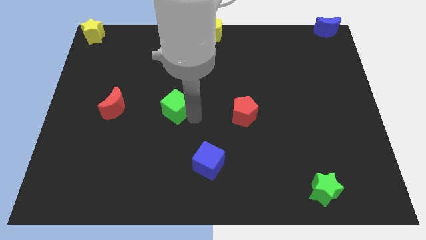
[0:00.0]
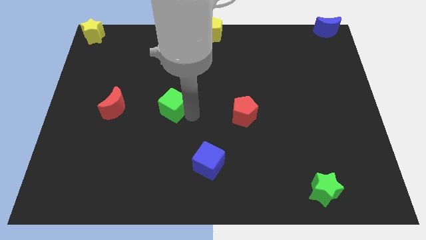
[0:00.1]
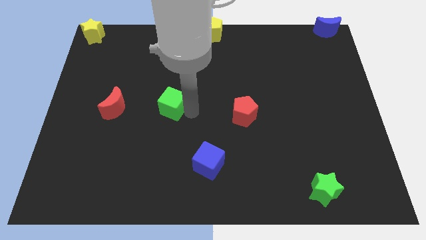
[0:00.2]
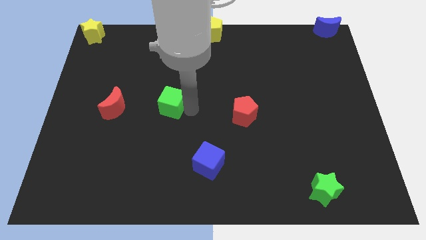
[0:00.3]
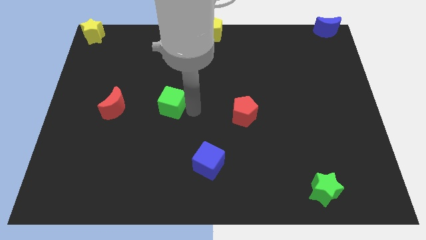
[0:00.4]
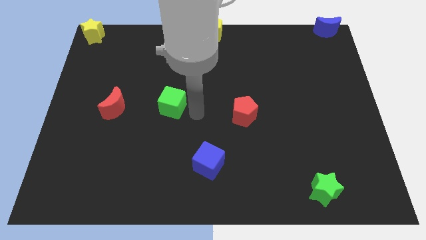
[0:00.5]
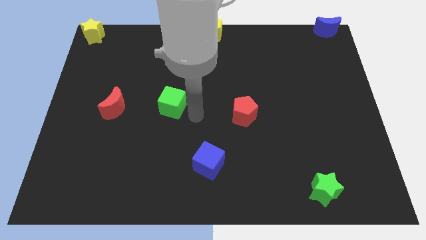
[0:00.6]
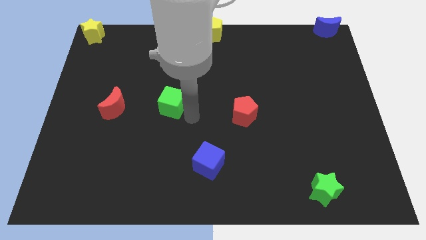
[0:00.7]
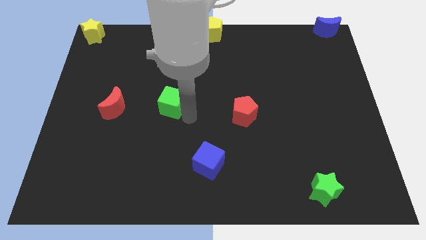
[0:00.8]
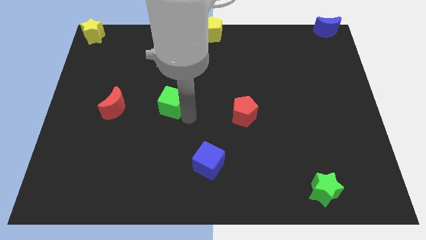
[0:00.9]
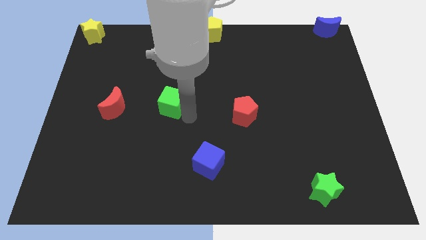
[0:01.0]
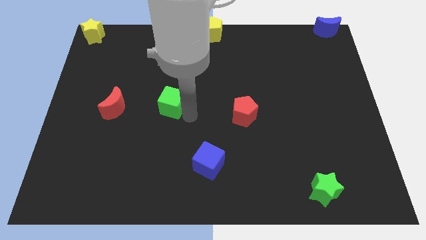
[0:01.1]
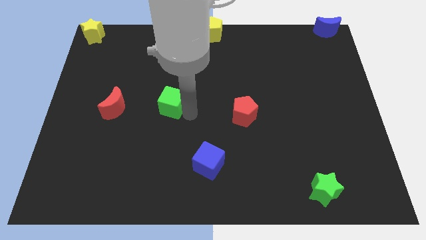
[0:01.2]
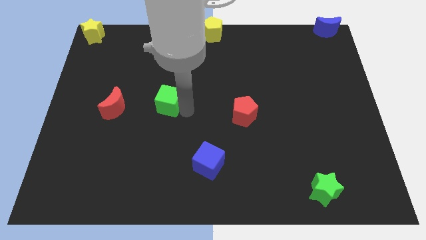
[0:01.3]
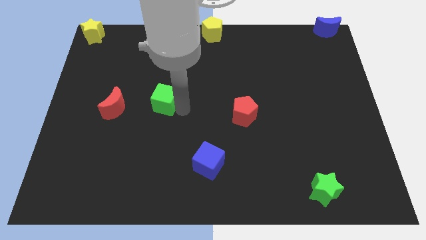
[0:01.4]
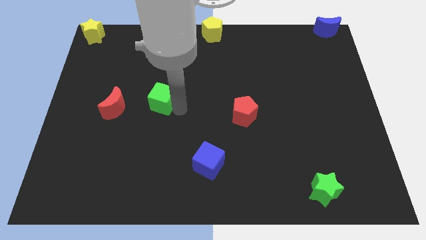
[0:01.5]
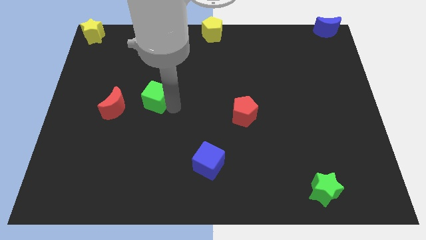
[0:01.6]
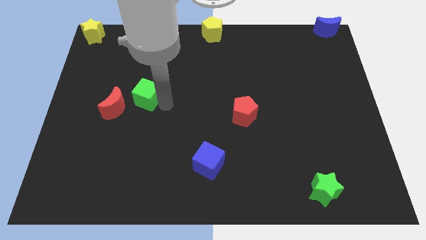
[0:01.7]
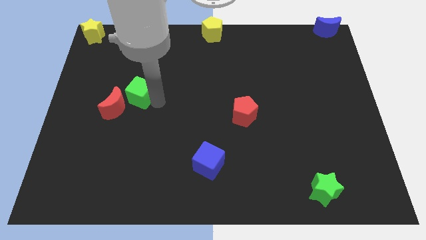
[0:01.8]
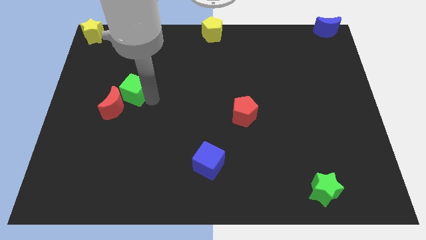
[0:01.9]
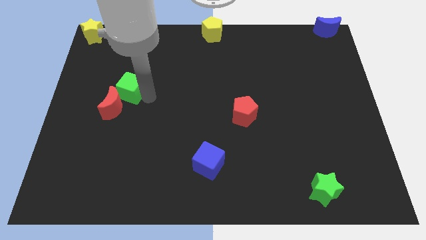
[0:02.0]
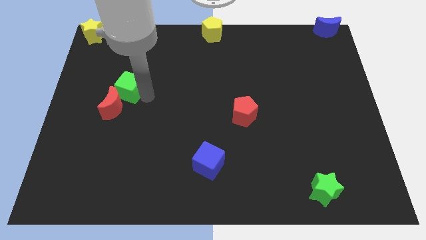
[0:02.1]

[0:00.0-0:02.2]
slide the green cube into the red moon

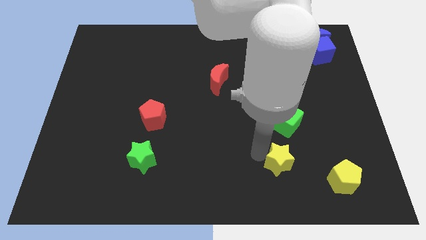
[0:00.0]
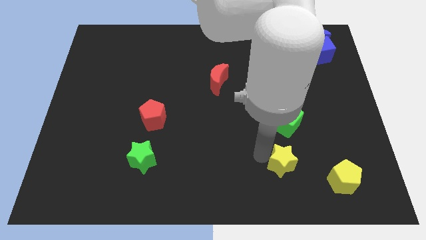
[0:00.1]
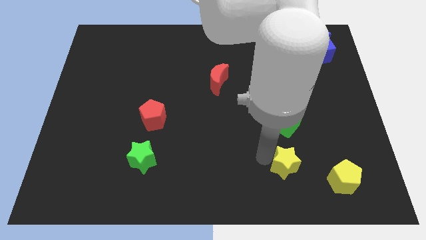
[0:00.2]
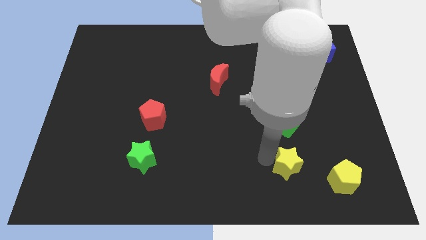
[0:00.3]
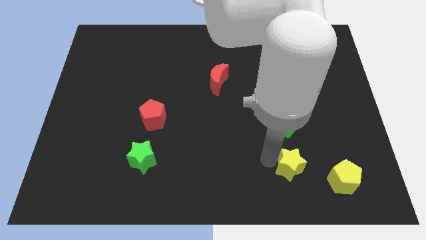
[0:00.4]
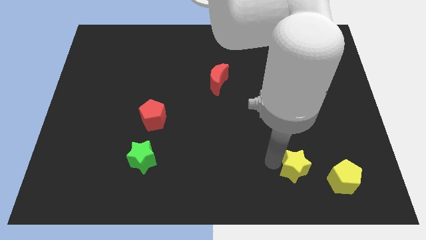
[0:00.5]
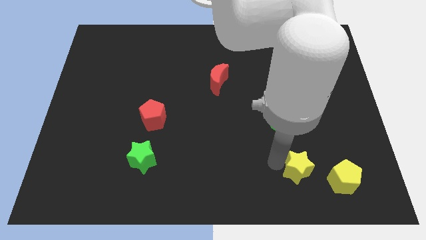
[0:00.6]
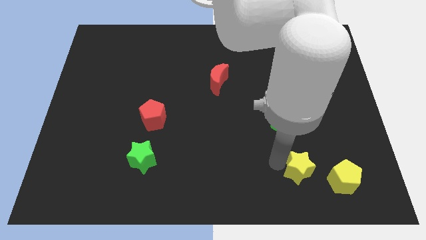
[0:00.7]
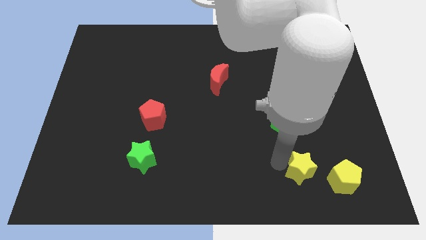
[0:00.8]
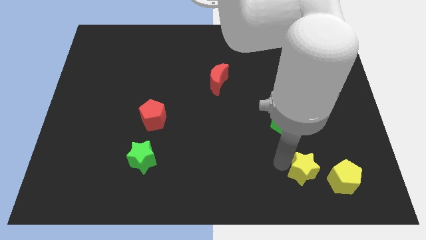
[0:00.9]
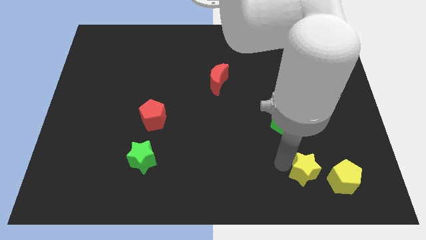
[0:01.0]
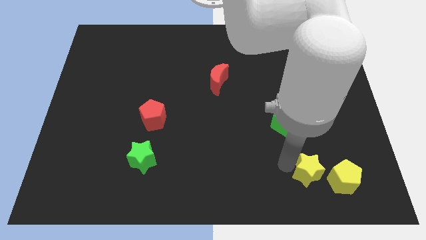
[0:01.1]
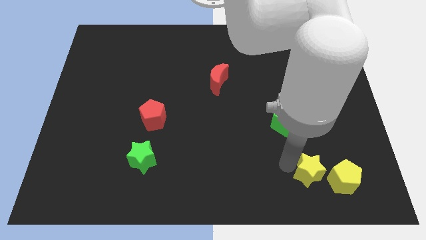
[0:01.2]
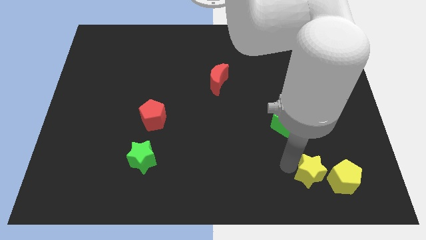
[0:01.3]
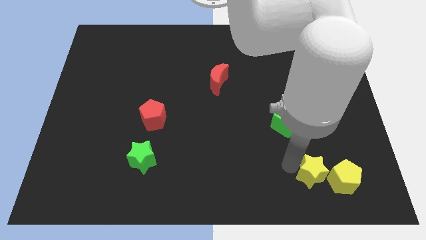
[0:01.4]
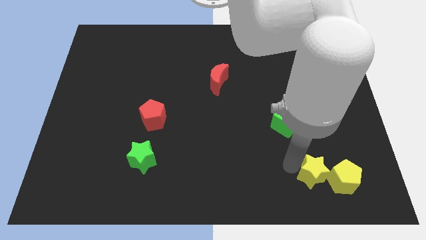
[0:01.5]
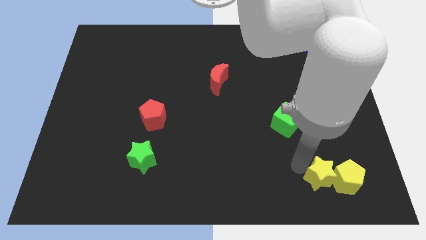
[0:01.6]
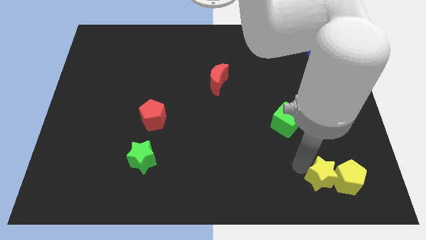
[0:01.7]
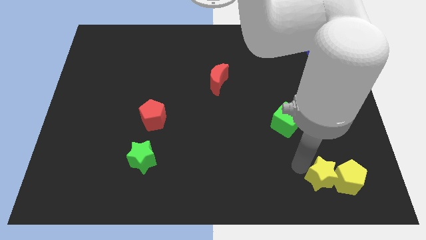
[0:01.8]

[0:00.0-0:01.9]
push the yellow star into the yellow pentagon

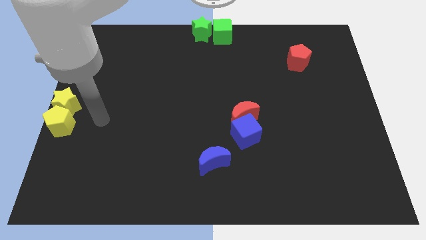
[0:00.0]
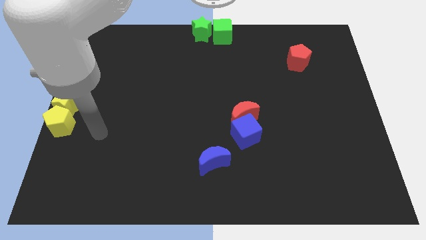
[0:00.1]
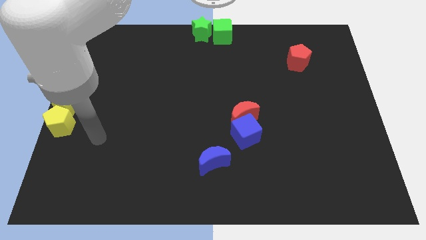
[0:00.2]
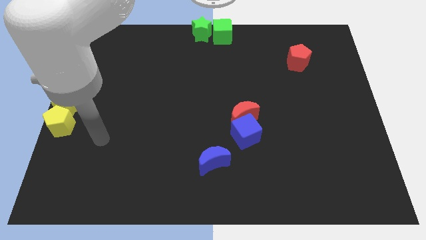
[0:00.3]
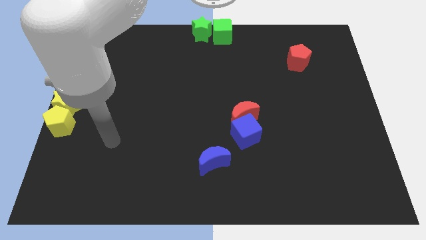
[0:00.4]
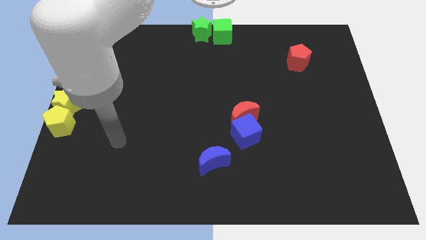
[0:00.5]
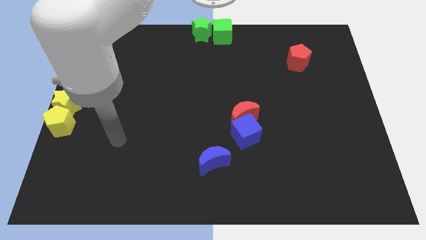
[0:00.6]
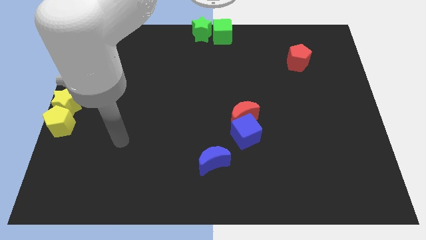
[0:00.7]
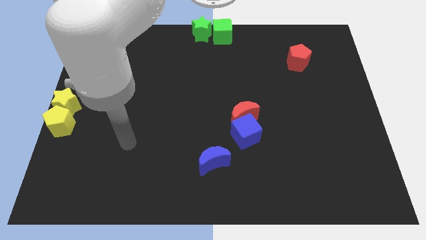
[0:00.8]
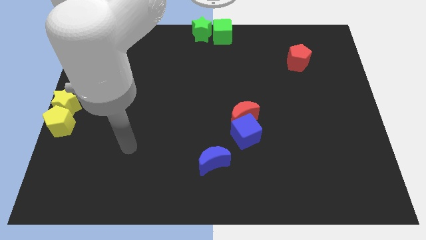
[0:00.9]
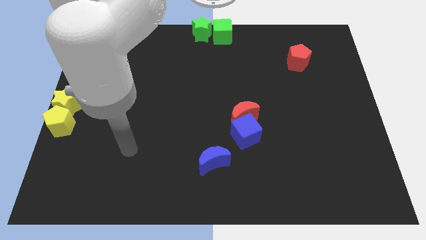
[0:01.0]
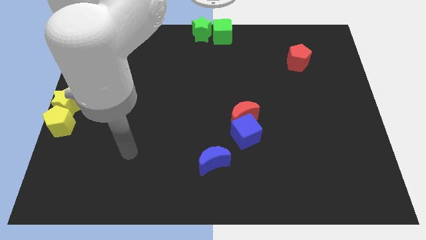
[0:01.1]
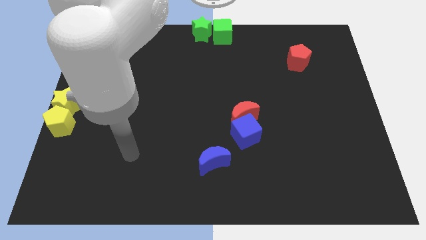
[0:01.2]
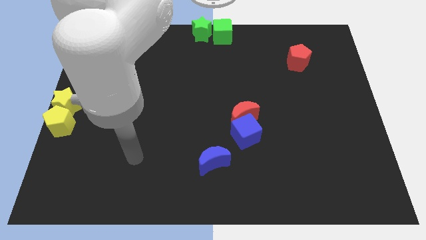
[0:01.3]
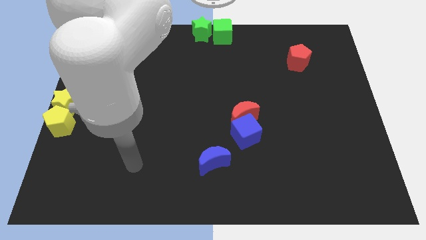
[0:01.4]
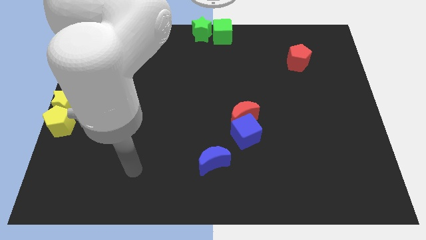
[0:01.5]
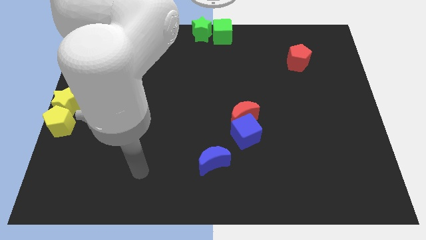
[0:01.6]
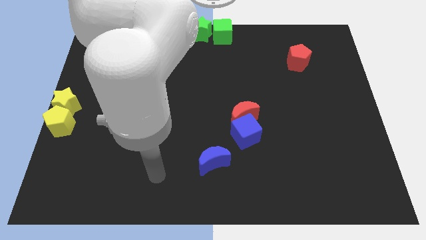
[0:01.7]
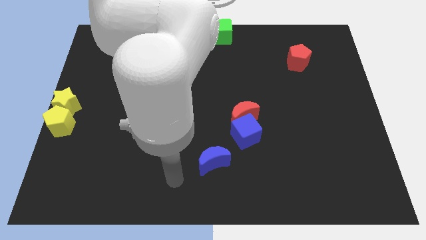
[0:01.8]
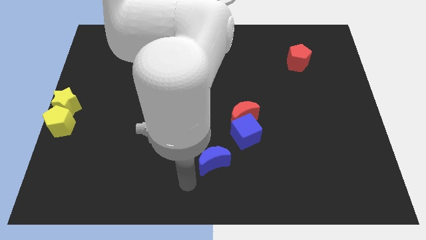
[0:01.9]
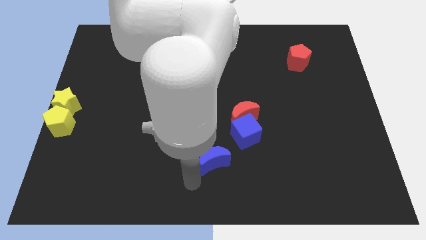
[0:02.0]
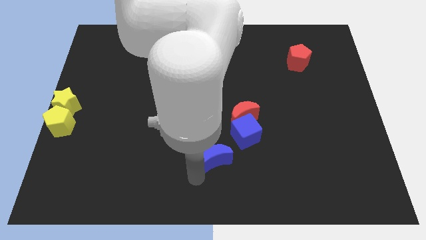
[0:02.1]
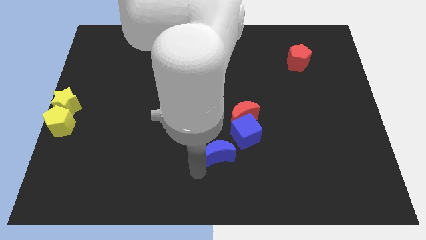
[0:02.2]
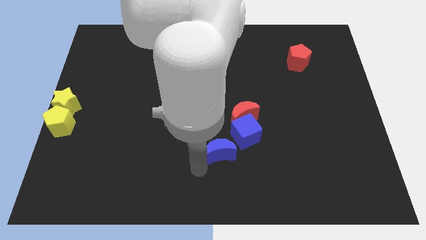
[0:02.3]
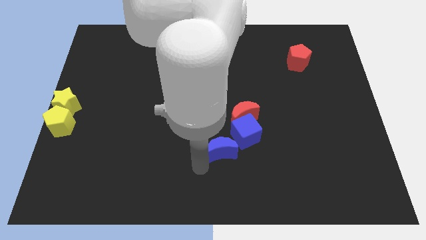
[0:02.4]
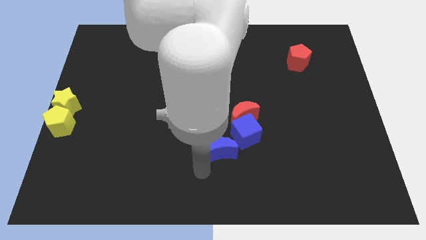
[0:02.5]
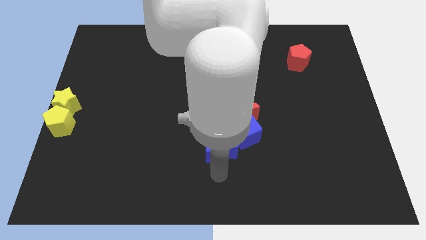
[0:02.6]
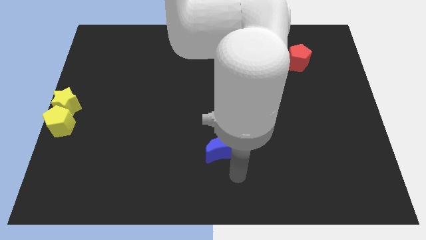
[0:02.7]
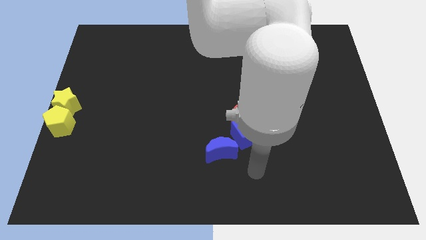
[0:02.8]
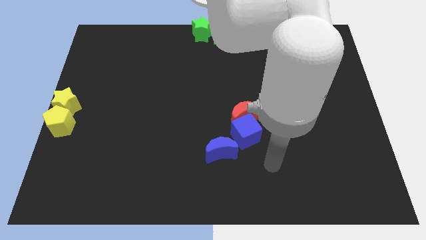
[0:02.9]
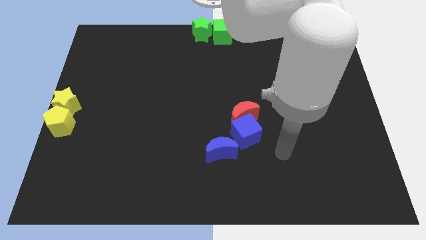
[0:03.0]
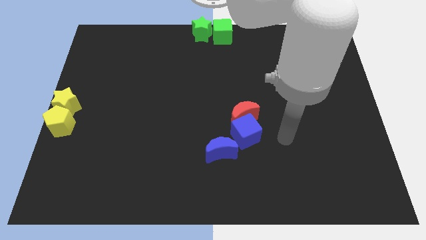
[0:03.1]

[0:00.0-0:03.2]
move the blue crescent slightly to the bottom of the blue cube

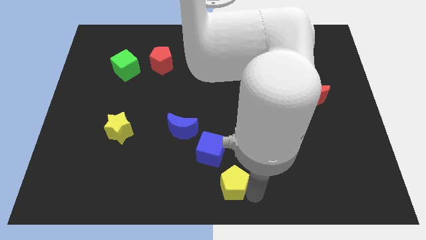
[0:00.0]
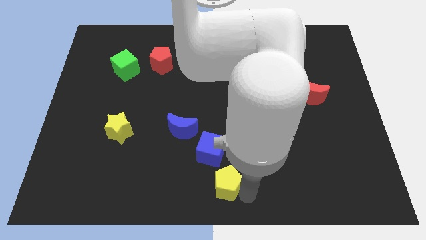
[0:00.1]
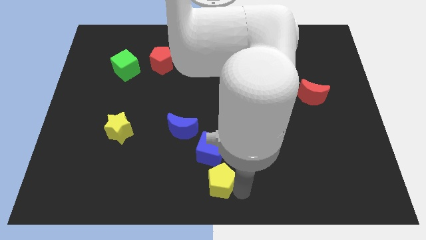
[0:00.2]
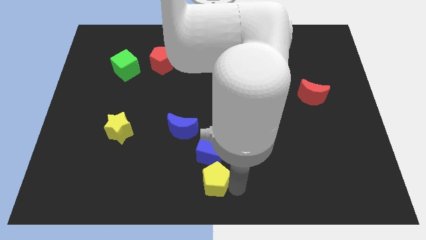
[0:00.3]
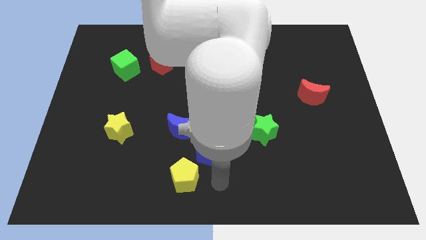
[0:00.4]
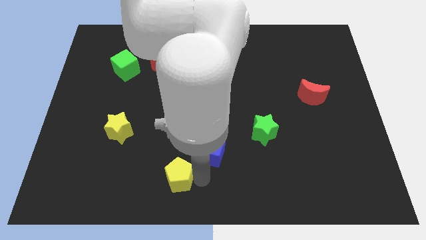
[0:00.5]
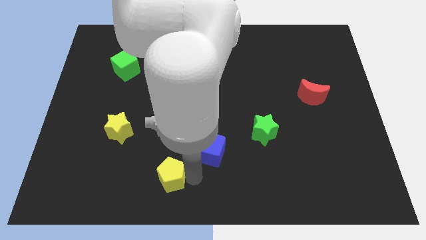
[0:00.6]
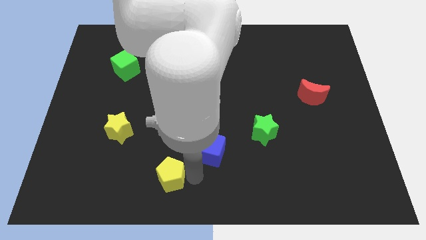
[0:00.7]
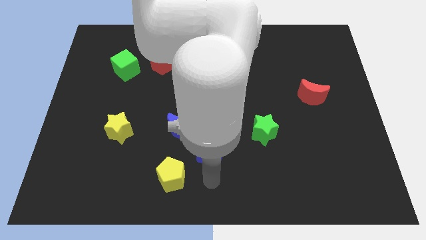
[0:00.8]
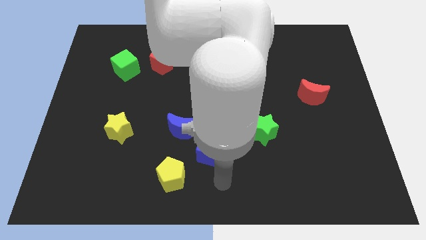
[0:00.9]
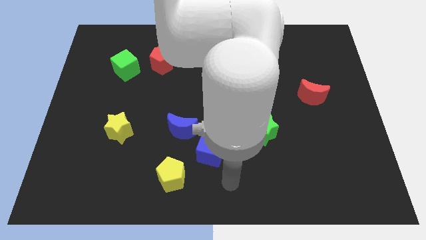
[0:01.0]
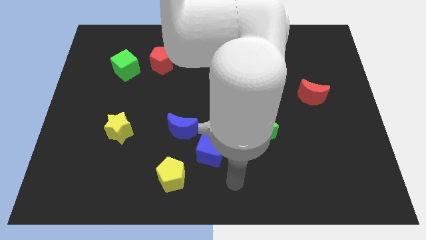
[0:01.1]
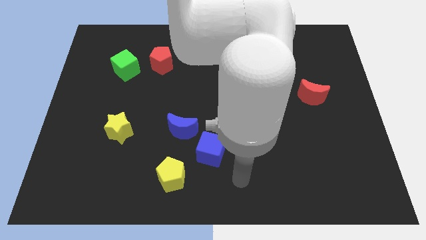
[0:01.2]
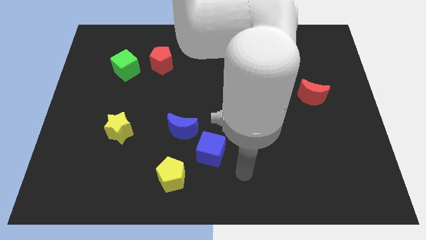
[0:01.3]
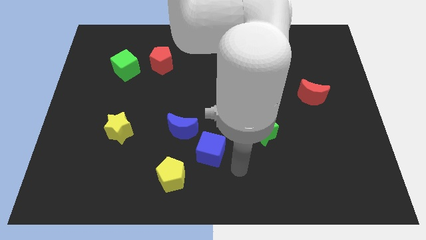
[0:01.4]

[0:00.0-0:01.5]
push the yellow pentagon to the bottom of the blue crescent

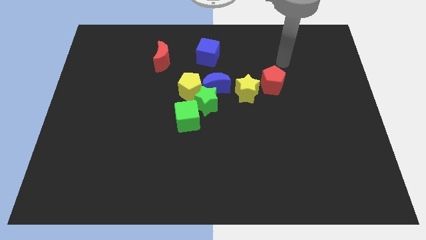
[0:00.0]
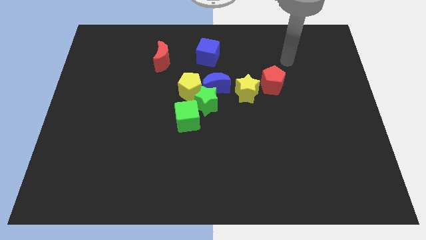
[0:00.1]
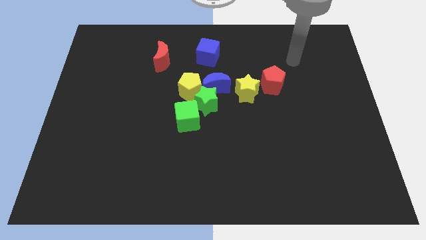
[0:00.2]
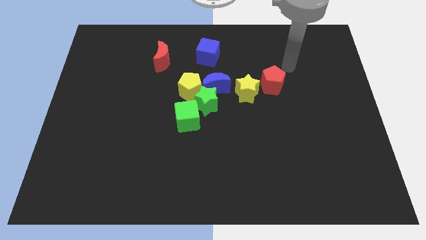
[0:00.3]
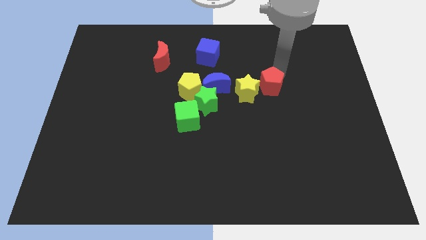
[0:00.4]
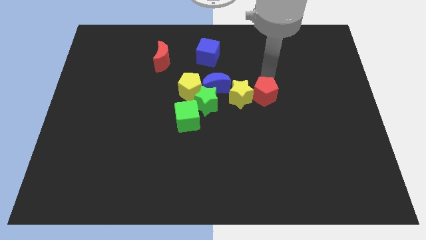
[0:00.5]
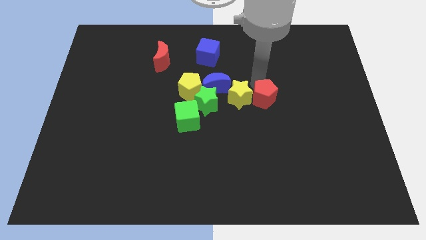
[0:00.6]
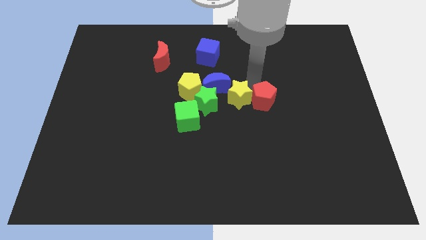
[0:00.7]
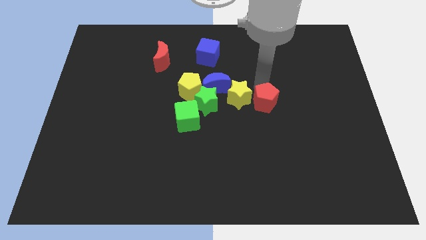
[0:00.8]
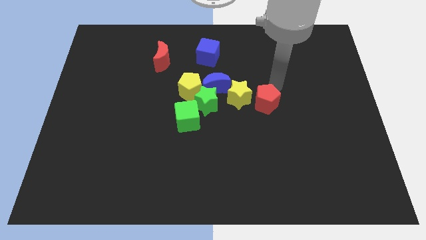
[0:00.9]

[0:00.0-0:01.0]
push the red pentagon into the yellow star
